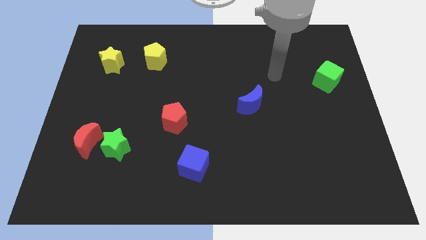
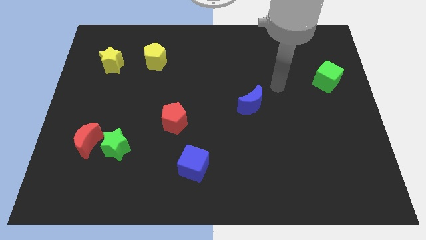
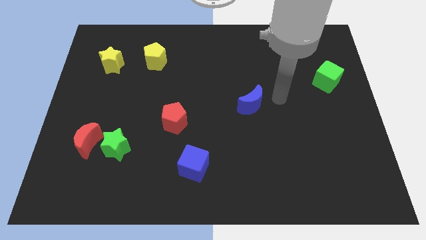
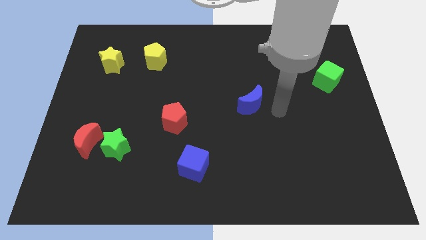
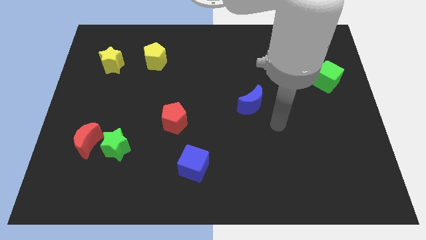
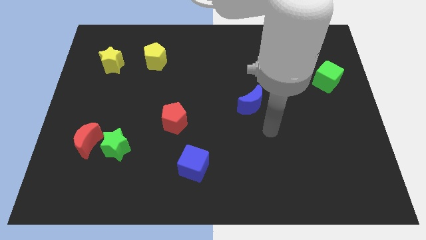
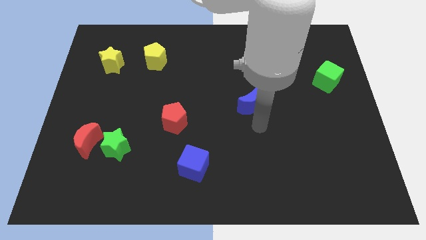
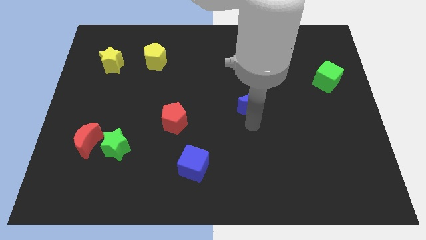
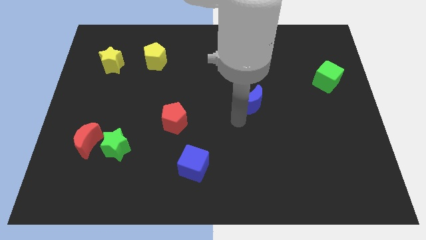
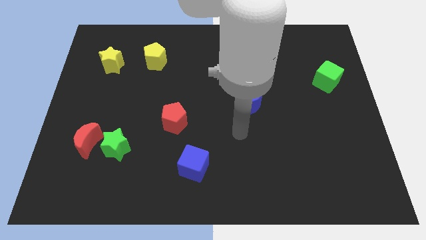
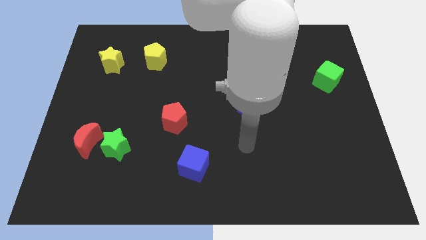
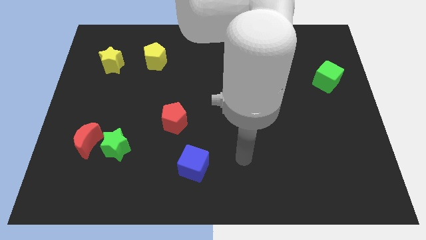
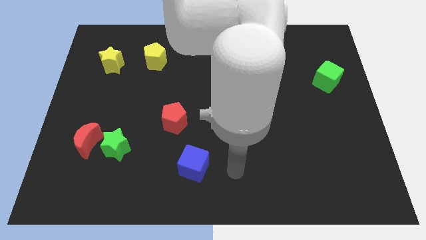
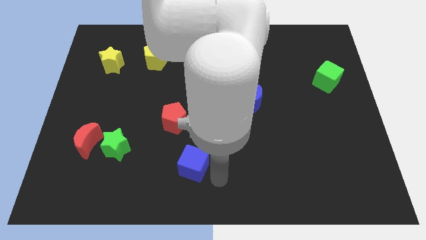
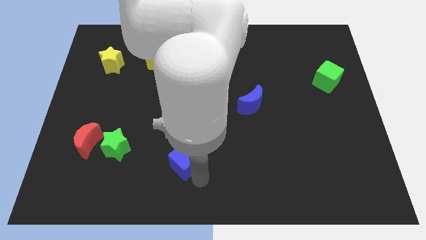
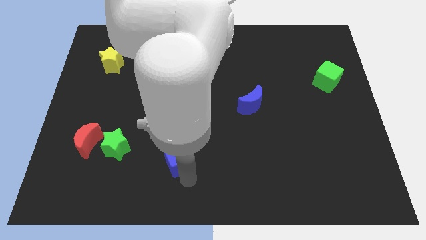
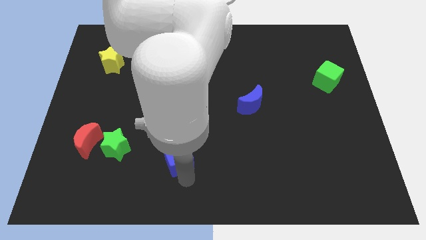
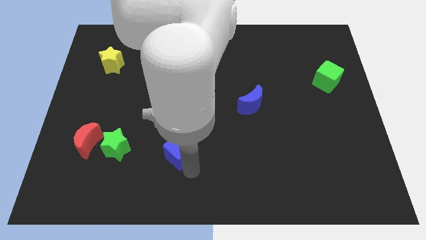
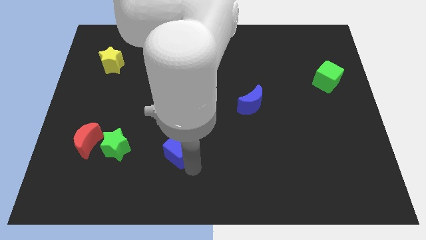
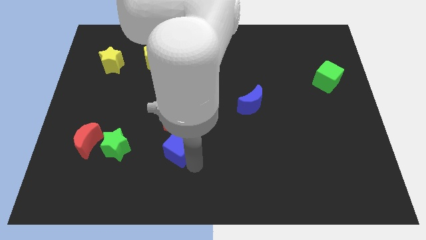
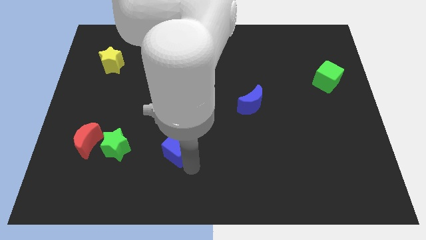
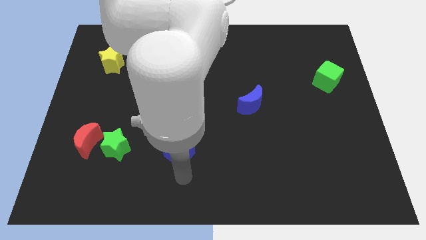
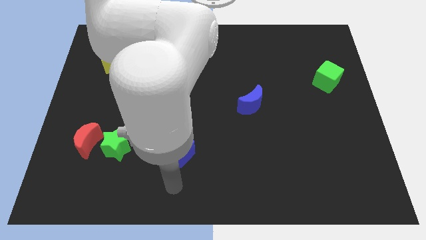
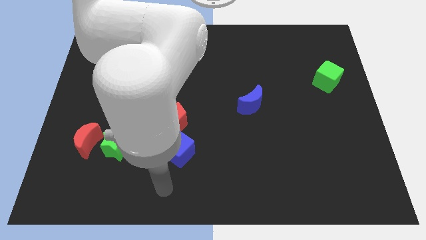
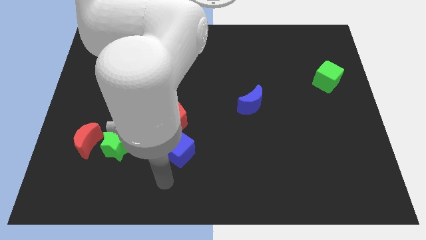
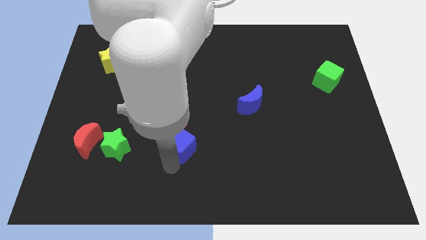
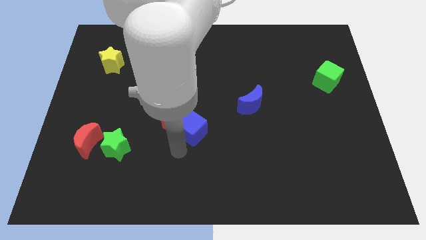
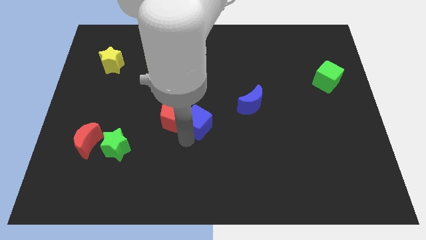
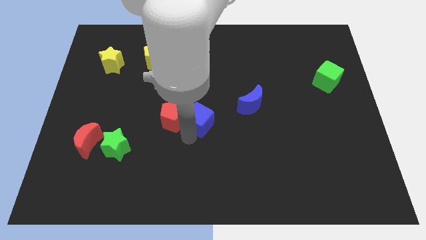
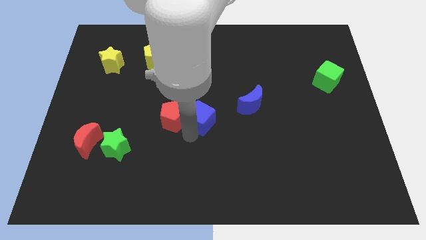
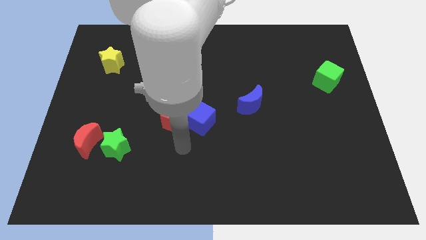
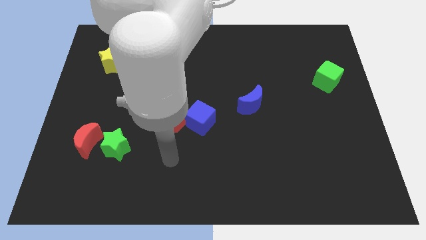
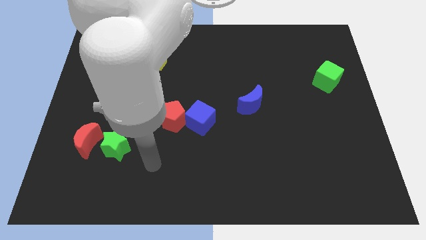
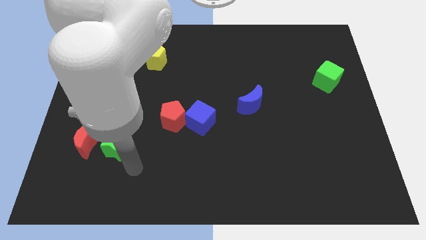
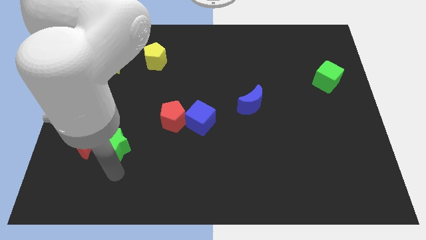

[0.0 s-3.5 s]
push the blue cube towards the center of the board

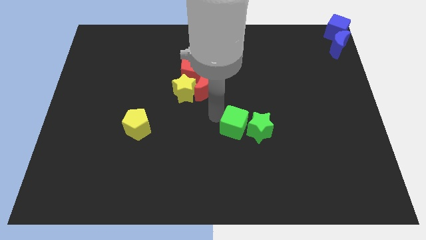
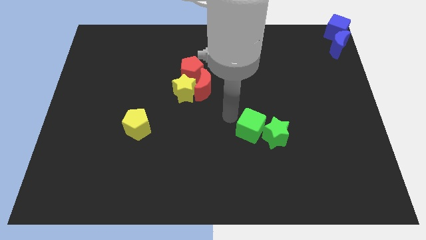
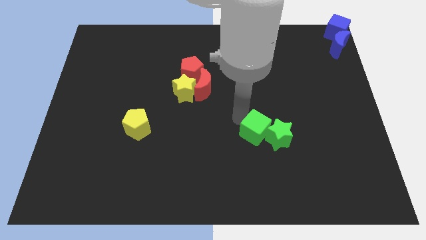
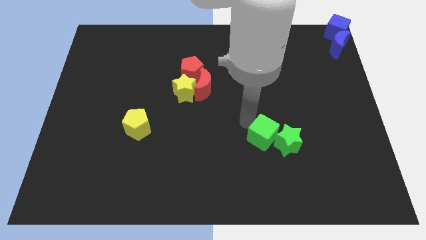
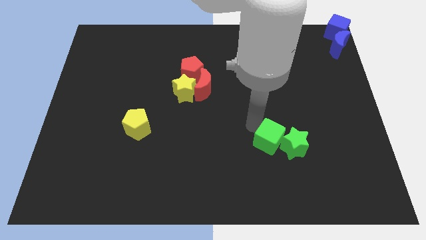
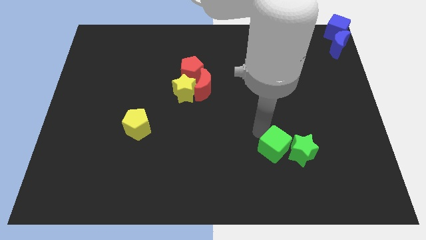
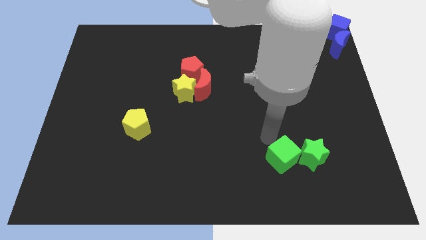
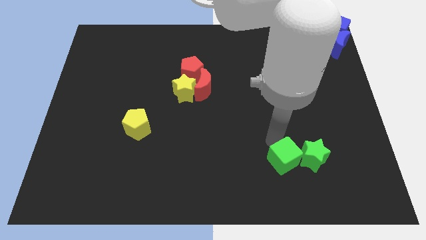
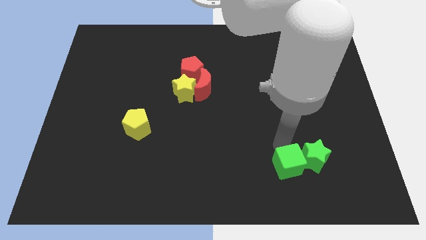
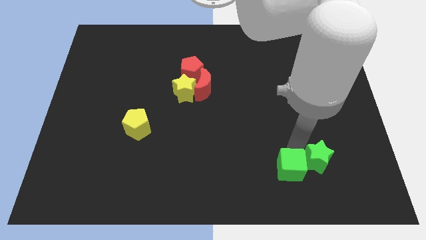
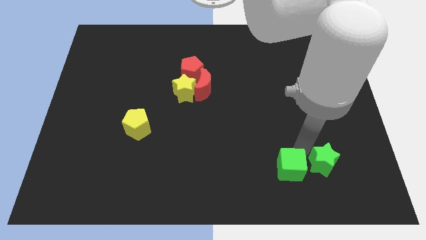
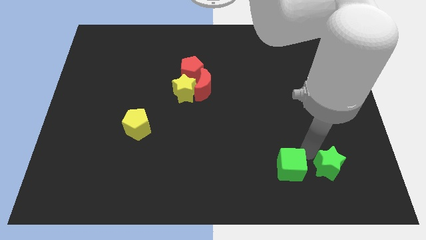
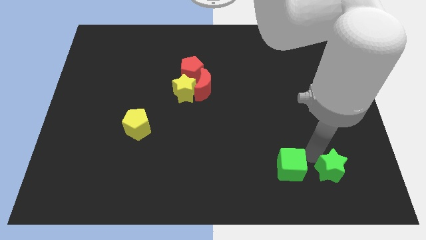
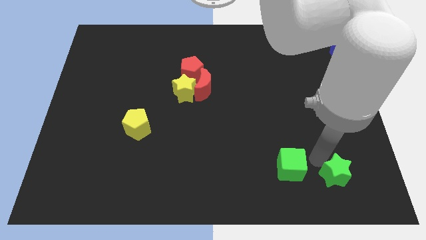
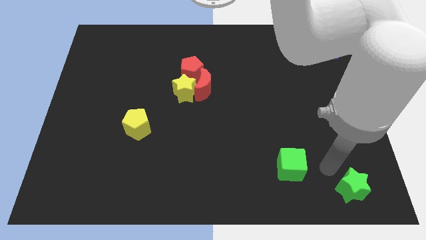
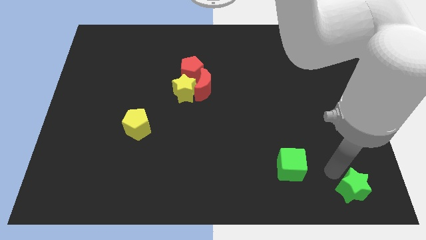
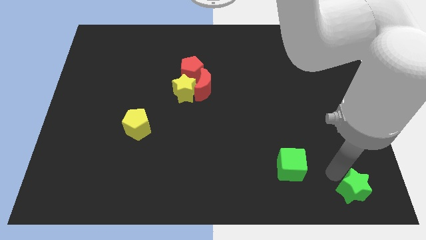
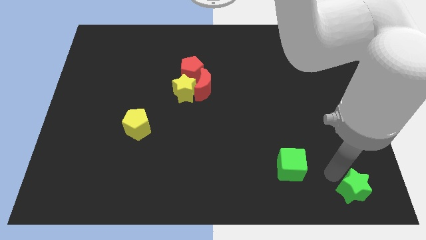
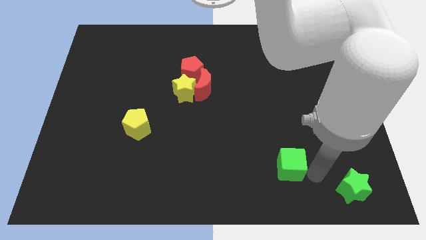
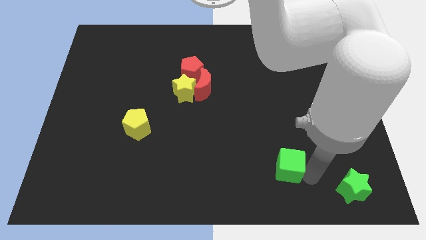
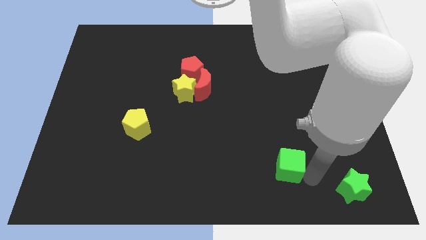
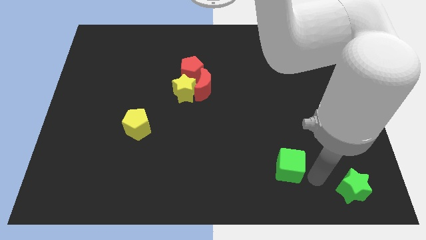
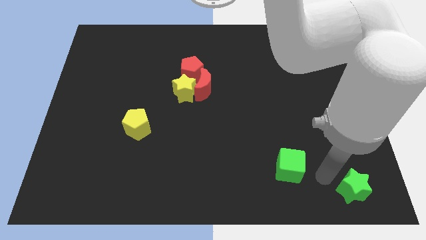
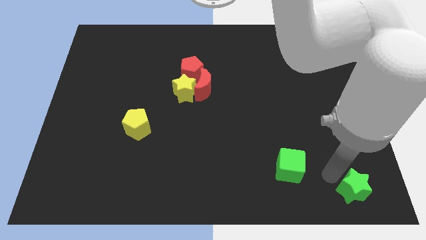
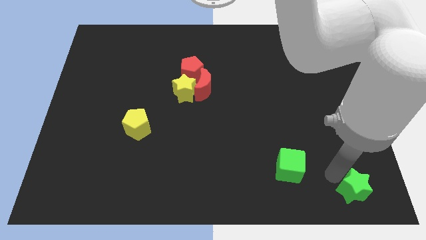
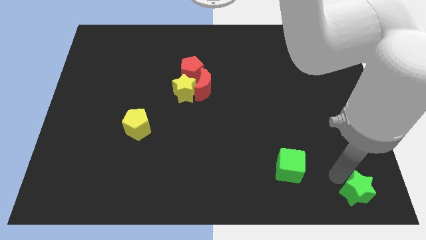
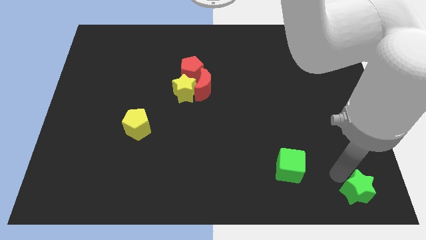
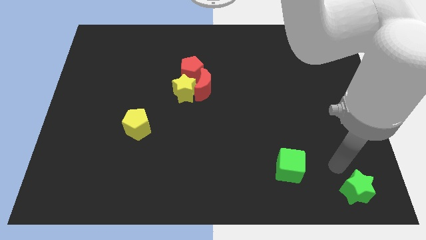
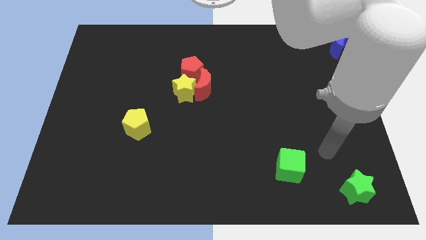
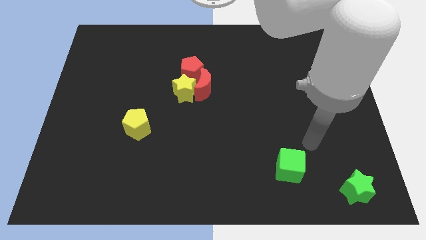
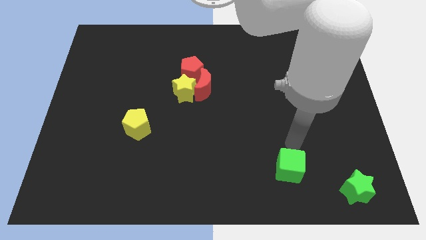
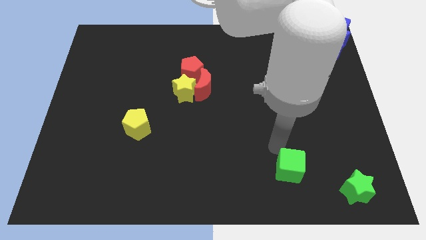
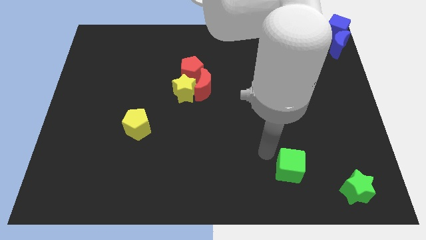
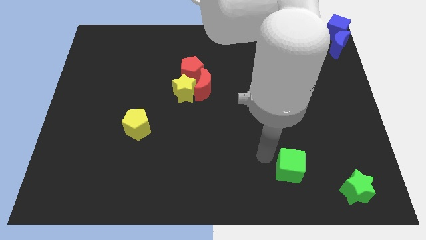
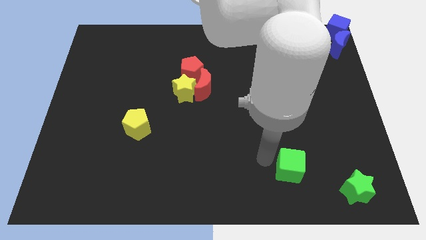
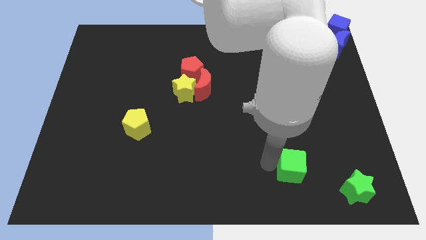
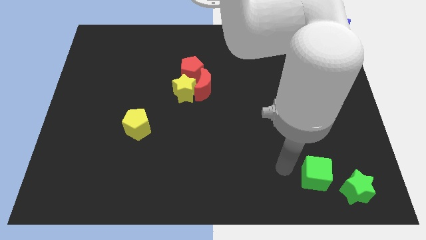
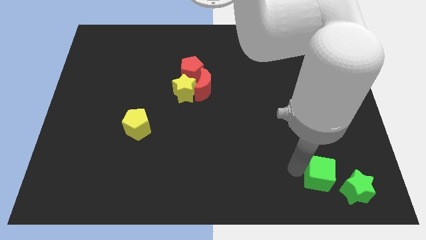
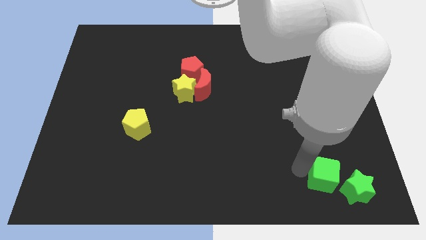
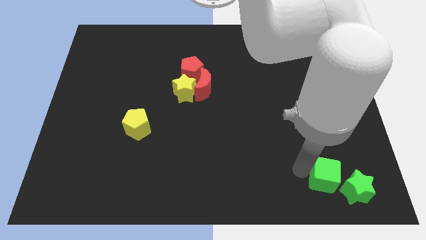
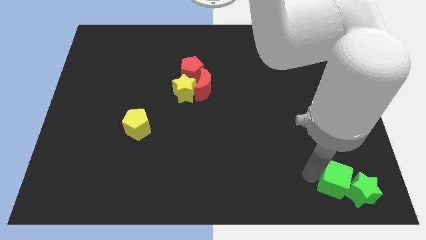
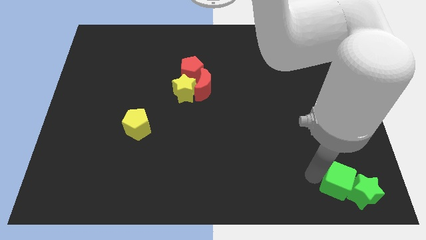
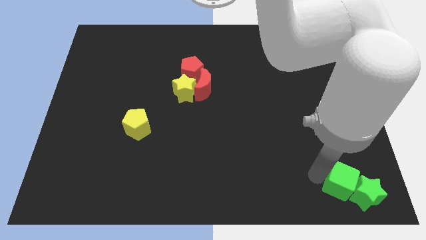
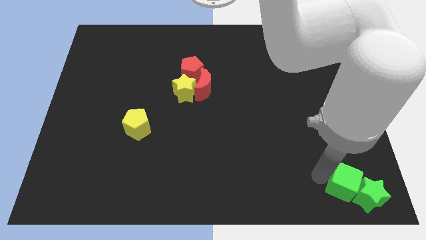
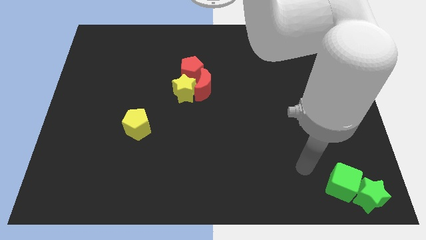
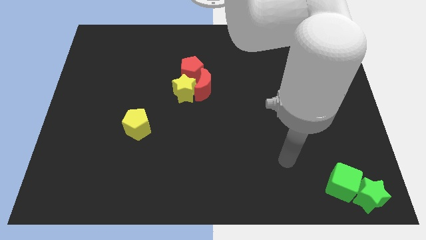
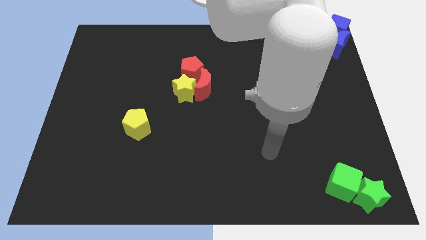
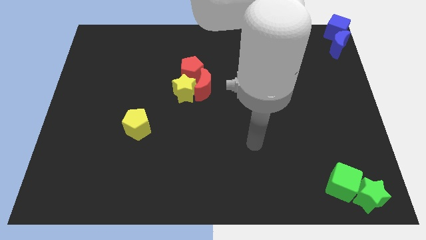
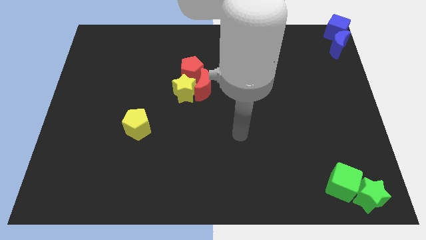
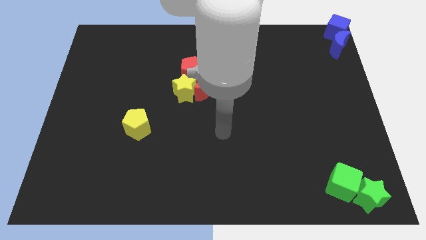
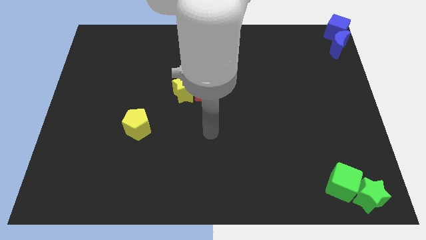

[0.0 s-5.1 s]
push the green blocks to the bottom rihtncob

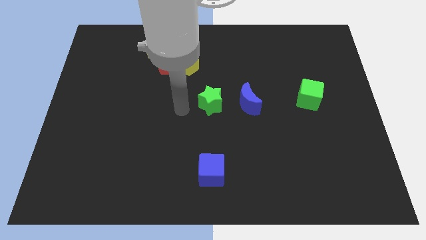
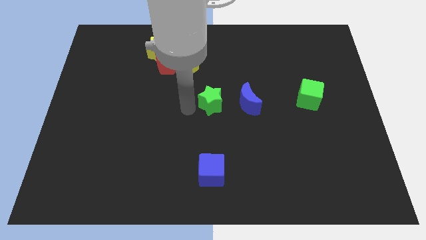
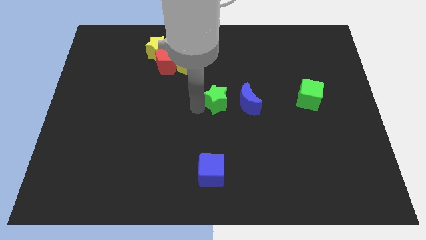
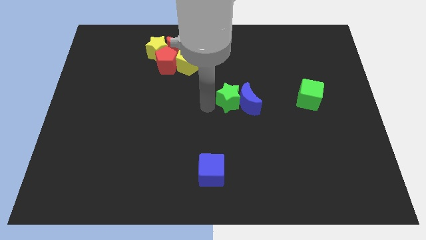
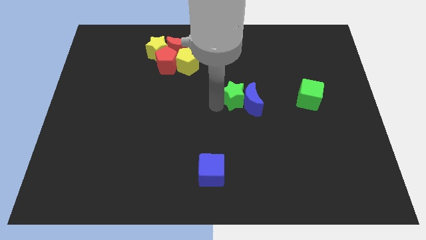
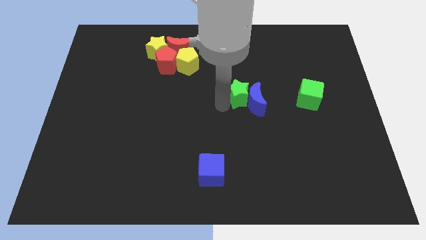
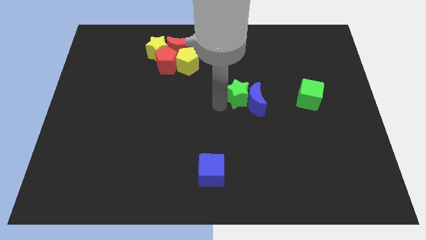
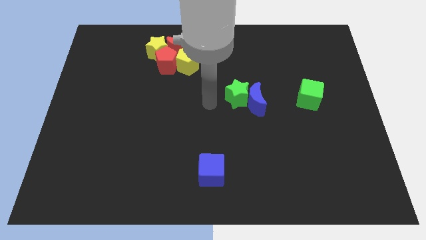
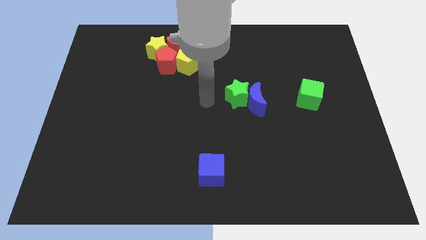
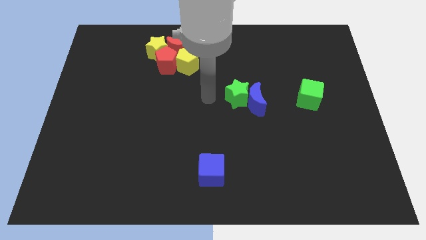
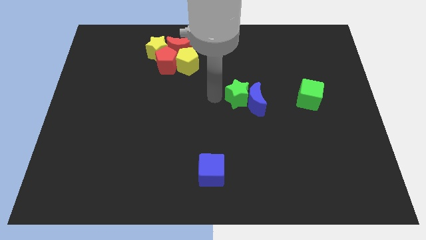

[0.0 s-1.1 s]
push green star in to blue crescent
